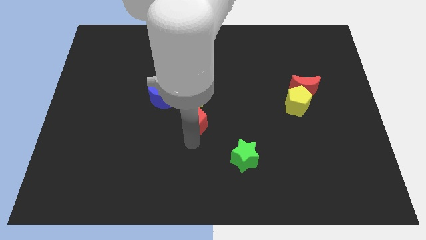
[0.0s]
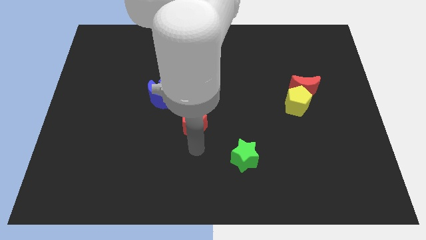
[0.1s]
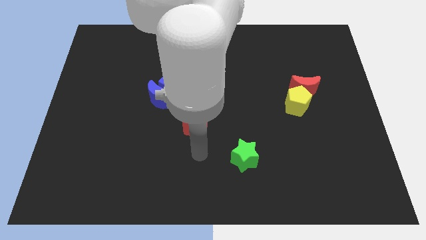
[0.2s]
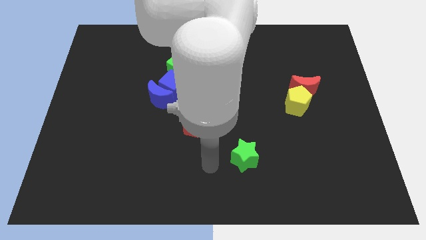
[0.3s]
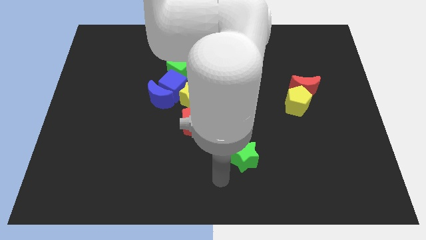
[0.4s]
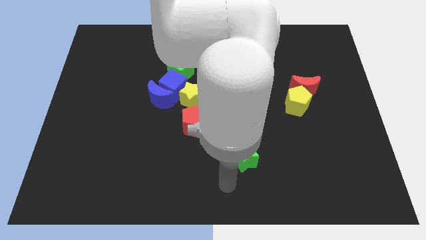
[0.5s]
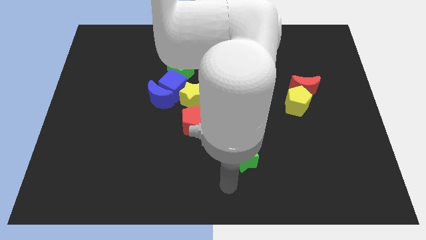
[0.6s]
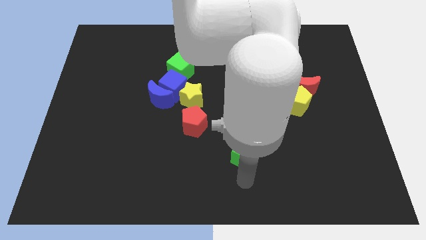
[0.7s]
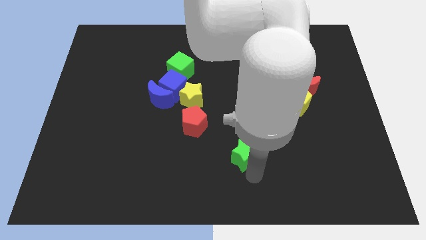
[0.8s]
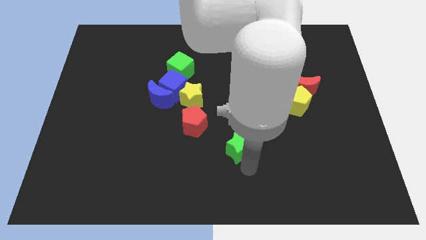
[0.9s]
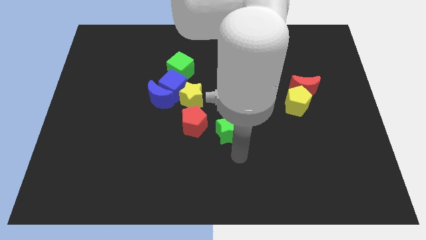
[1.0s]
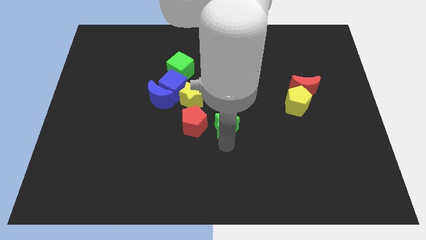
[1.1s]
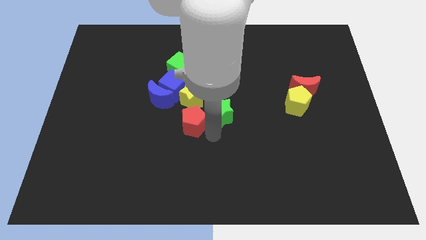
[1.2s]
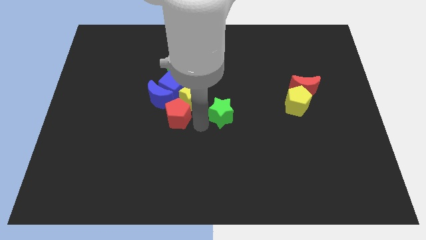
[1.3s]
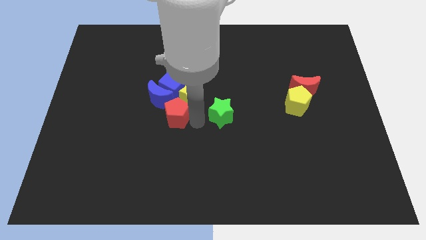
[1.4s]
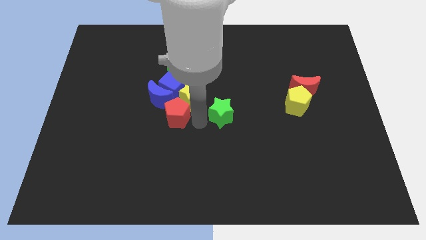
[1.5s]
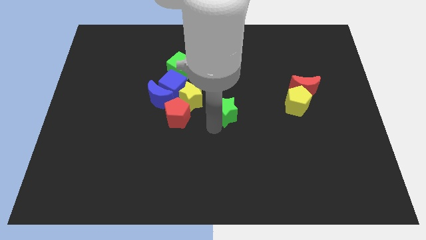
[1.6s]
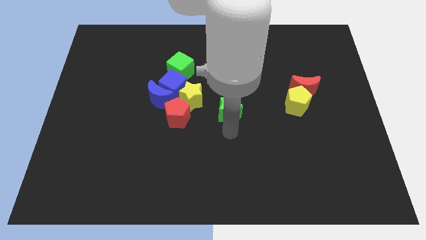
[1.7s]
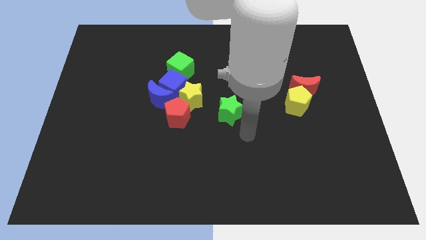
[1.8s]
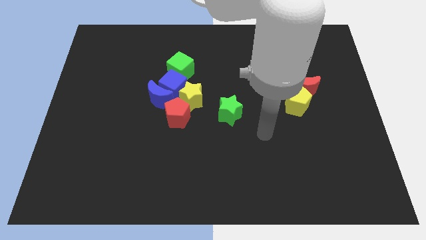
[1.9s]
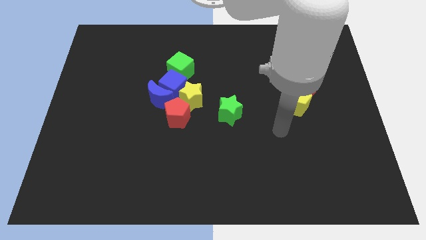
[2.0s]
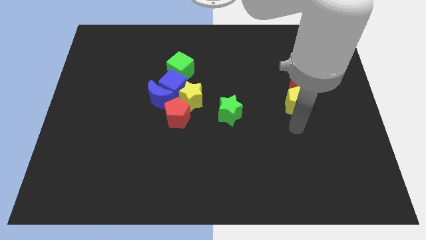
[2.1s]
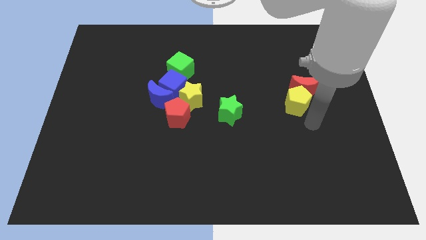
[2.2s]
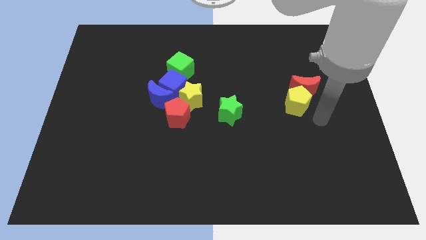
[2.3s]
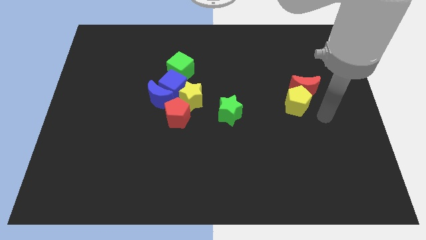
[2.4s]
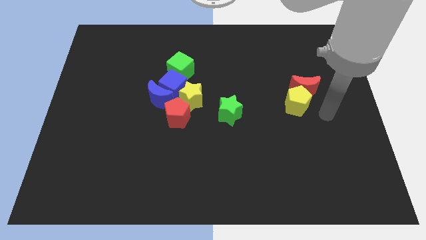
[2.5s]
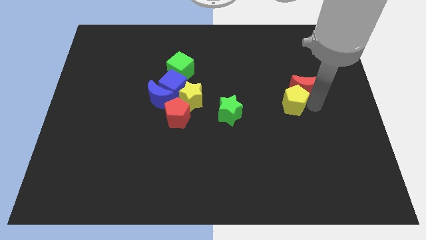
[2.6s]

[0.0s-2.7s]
push the green star and red pentagon horizontal to each other

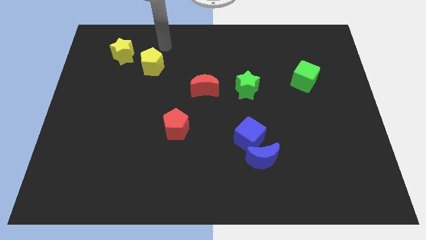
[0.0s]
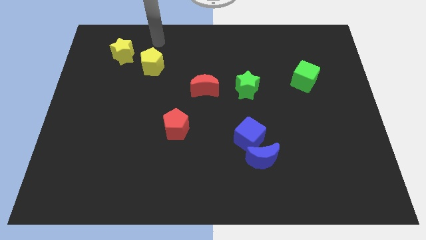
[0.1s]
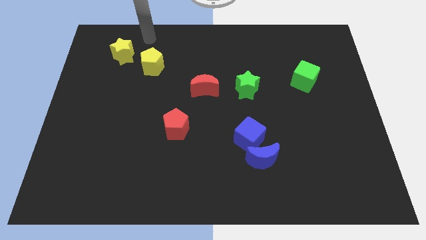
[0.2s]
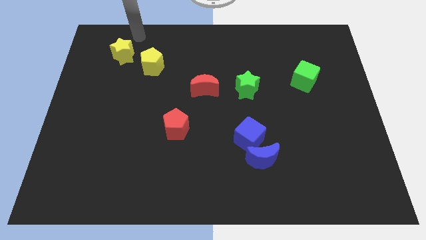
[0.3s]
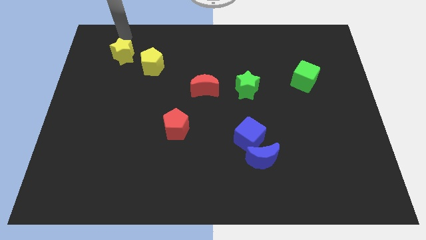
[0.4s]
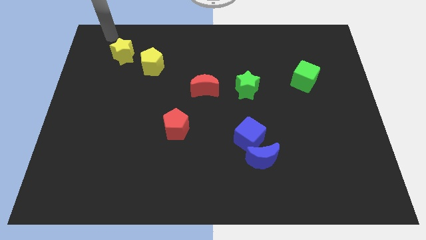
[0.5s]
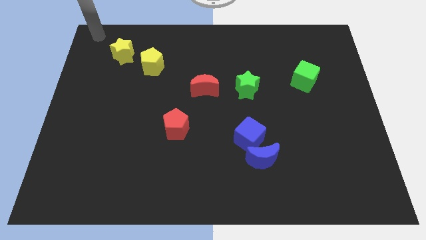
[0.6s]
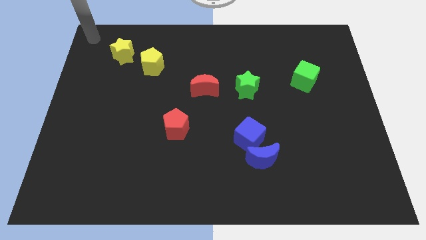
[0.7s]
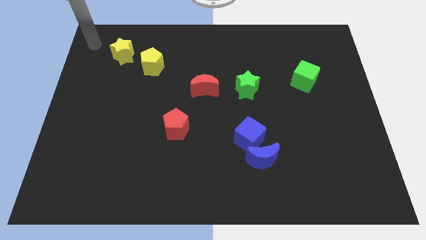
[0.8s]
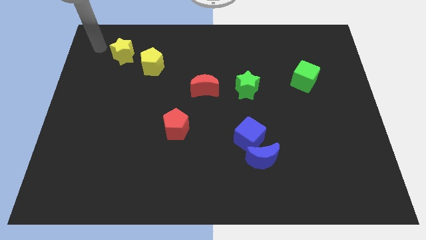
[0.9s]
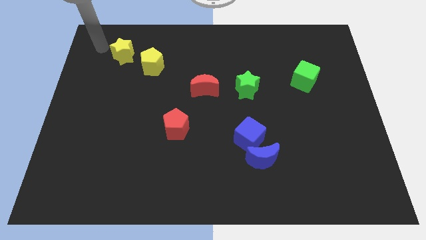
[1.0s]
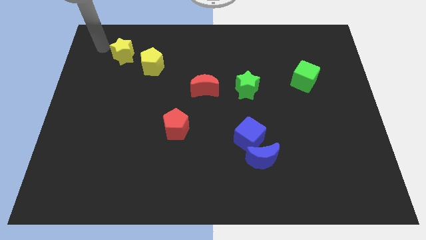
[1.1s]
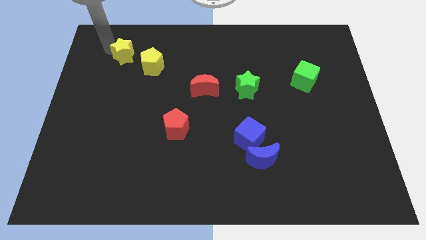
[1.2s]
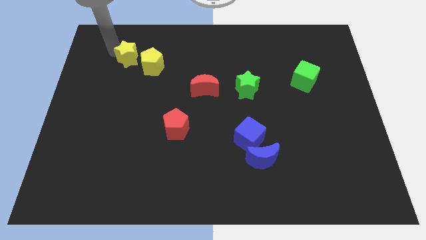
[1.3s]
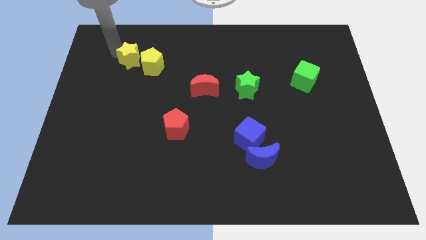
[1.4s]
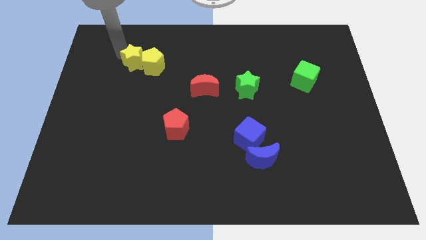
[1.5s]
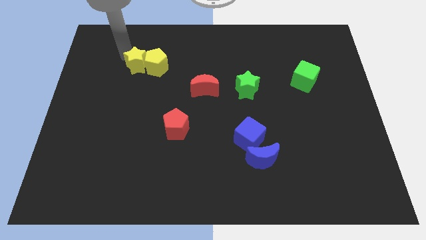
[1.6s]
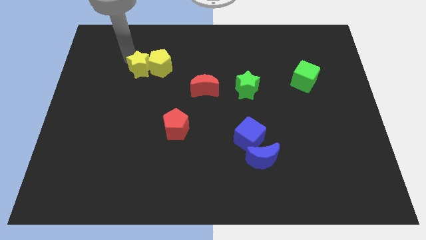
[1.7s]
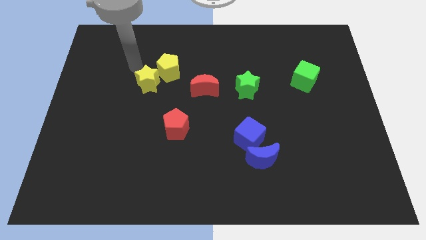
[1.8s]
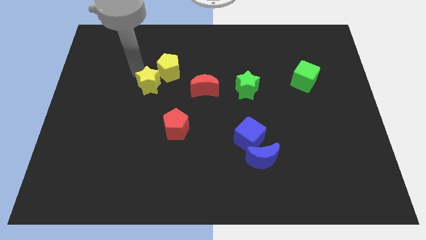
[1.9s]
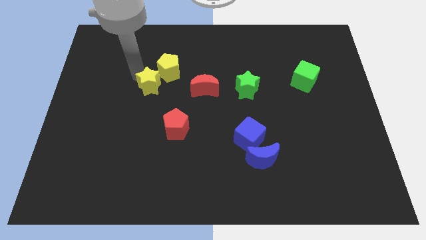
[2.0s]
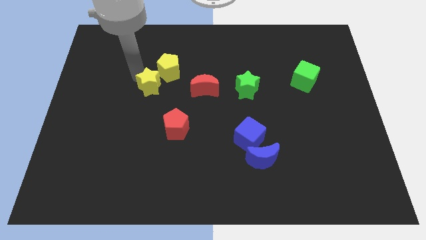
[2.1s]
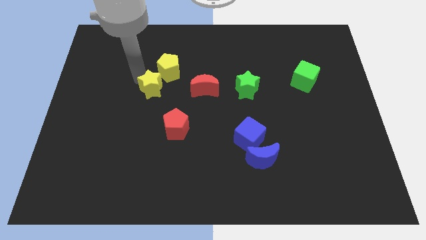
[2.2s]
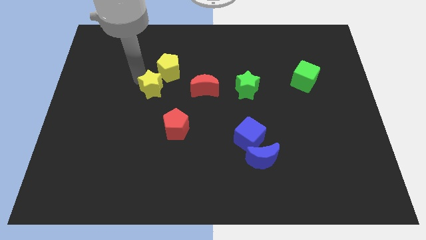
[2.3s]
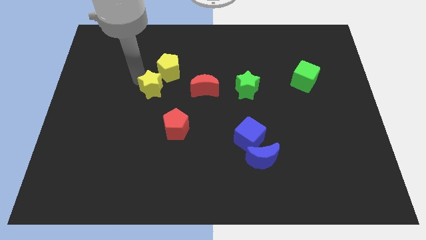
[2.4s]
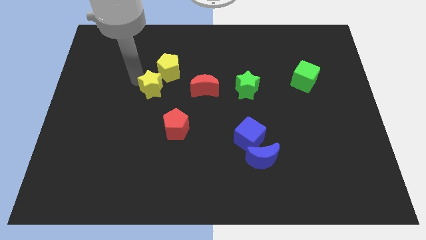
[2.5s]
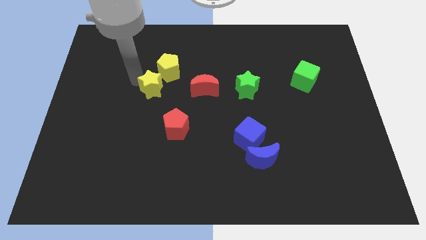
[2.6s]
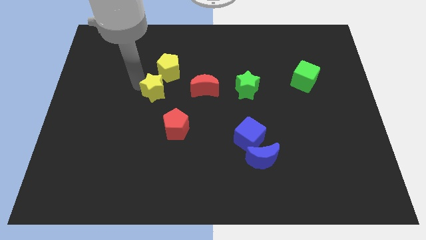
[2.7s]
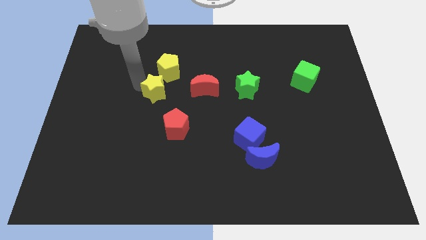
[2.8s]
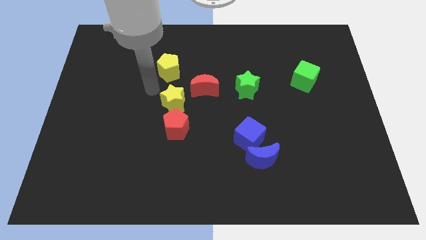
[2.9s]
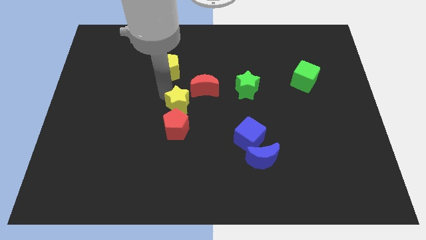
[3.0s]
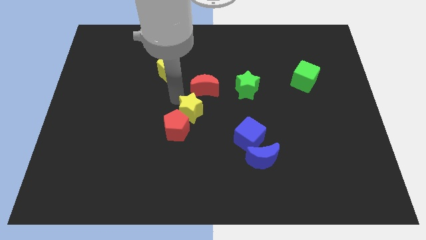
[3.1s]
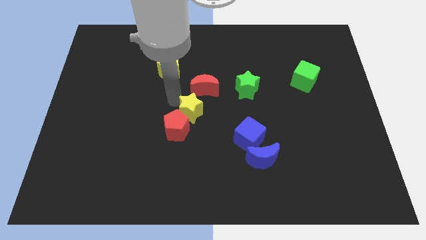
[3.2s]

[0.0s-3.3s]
move the yellow star to the middle of red crescent and pentagon

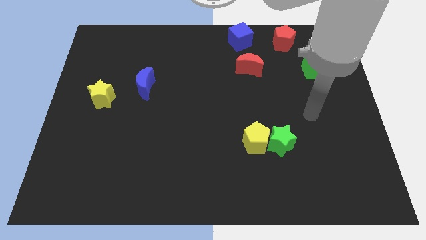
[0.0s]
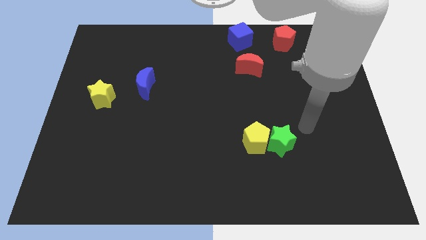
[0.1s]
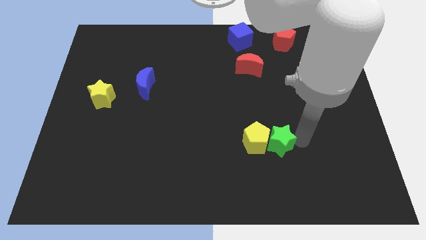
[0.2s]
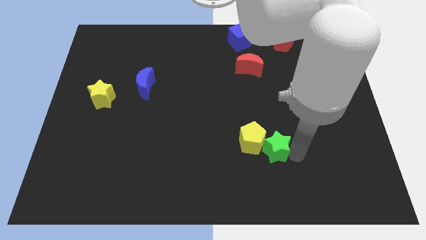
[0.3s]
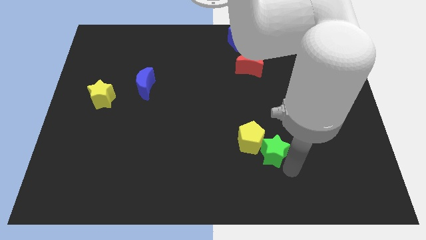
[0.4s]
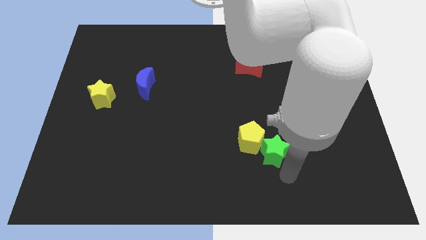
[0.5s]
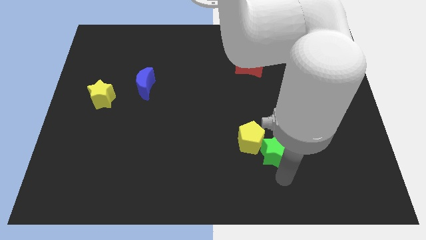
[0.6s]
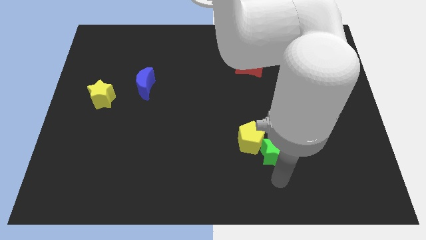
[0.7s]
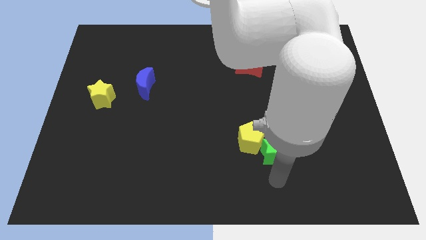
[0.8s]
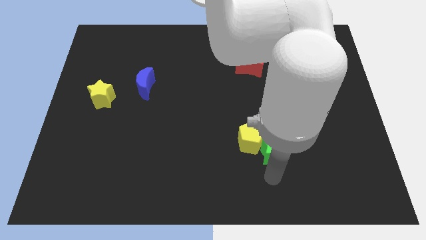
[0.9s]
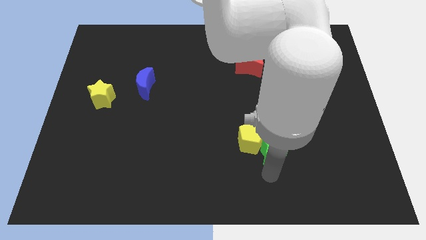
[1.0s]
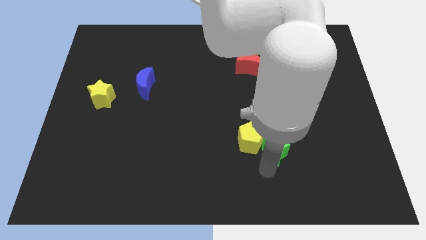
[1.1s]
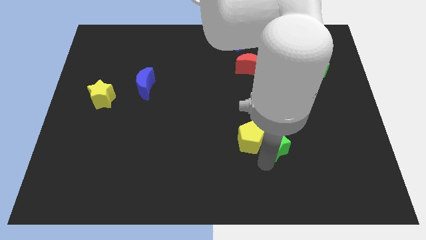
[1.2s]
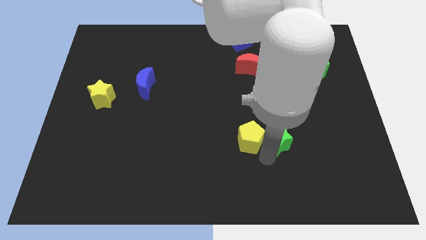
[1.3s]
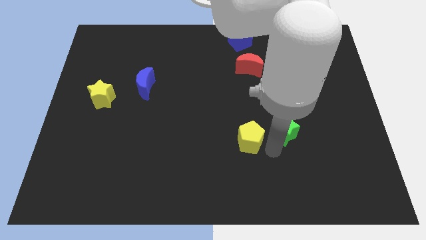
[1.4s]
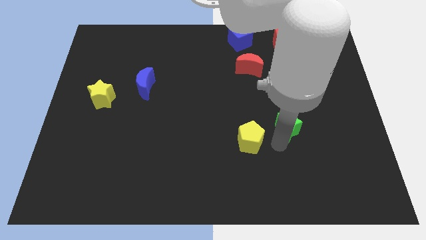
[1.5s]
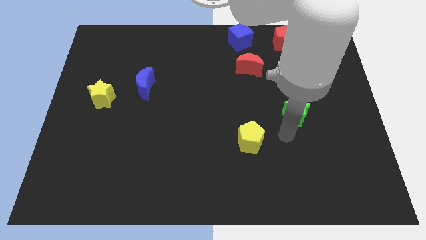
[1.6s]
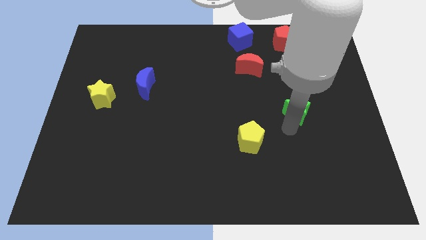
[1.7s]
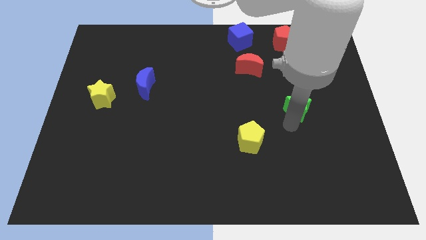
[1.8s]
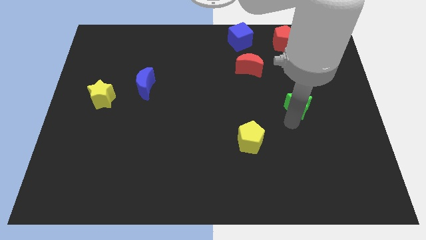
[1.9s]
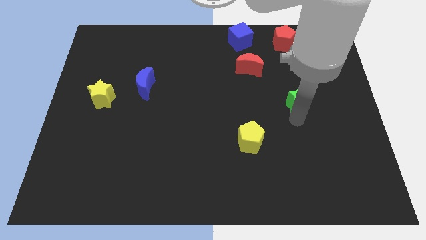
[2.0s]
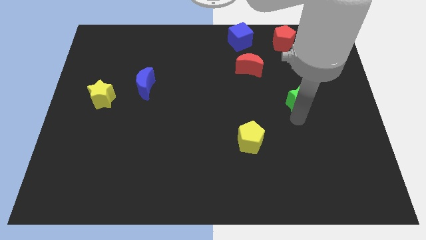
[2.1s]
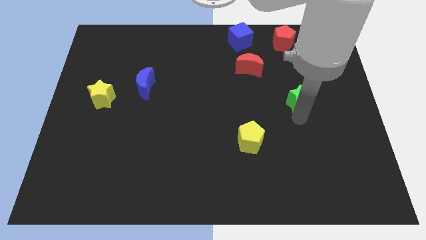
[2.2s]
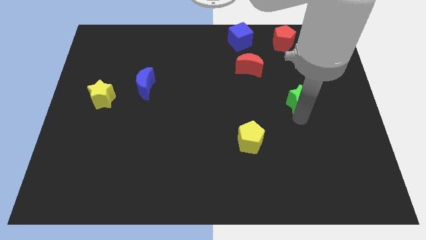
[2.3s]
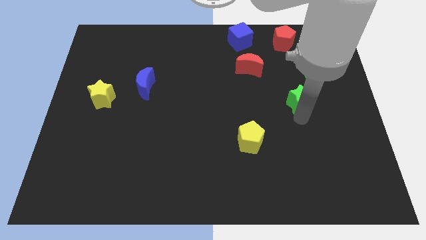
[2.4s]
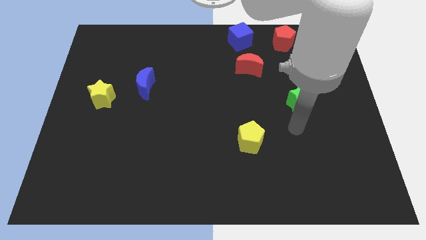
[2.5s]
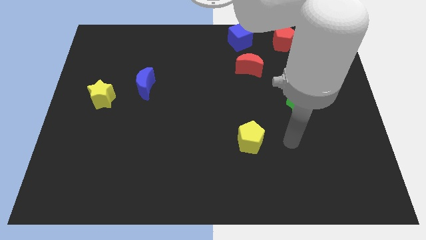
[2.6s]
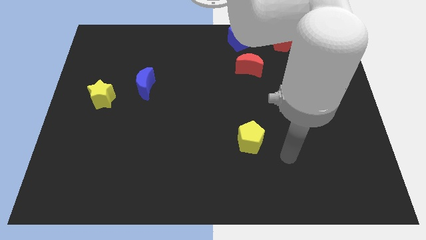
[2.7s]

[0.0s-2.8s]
push the green star upwards slightly

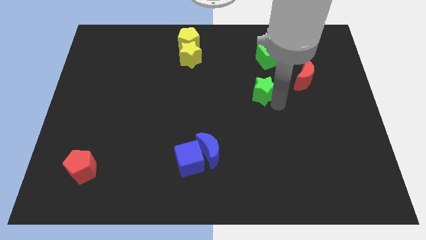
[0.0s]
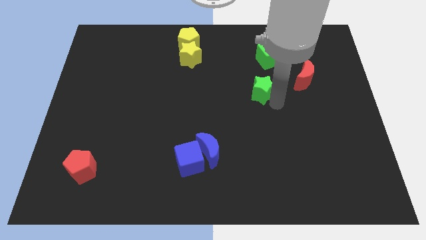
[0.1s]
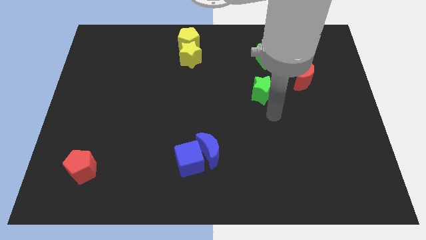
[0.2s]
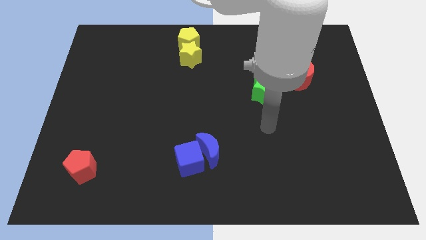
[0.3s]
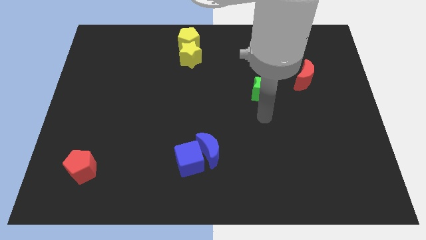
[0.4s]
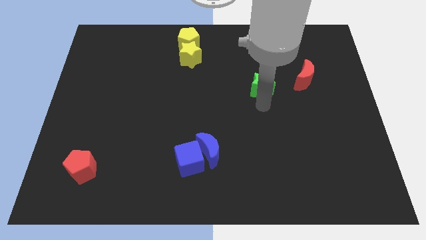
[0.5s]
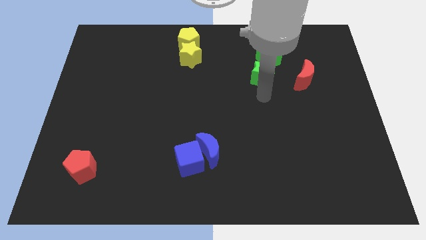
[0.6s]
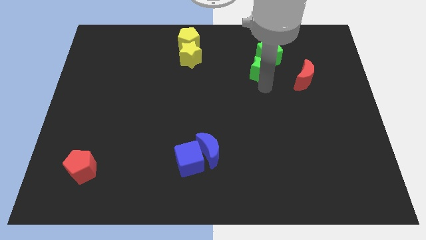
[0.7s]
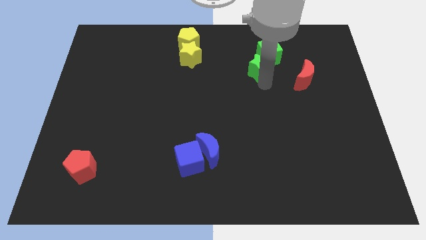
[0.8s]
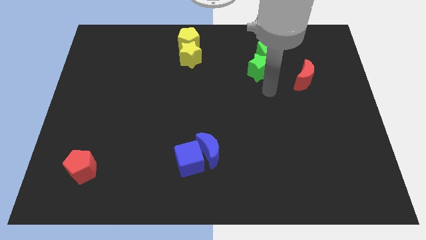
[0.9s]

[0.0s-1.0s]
push the green star close to the green cube
